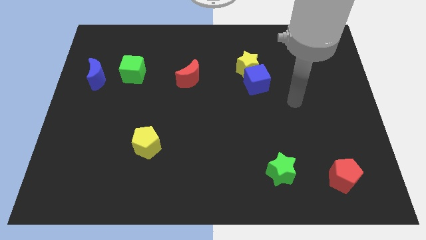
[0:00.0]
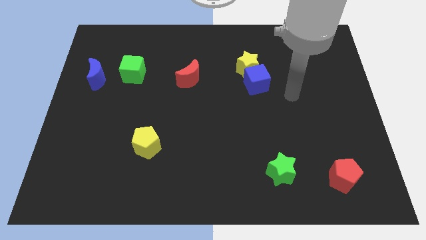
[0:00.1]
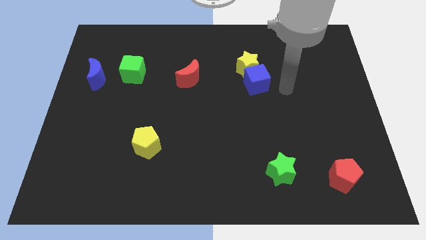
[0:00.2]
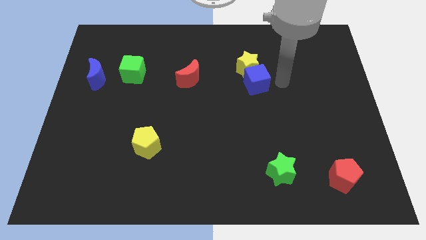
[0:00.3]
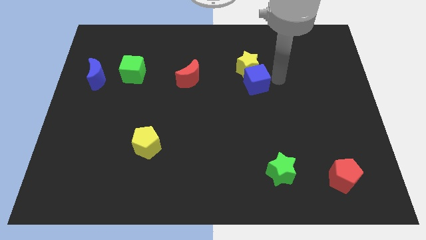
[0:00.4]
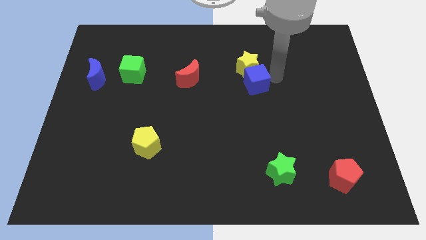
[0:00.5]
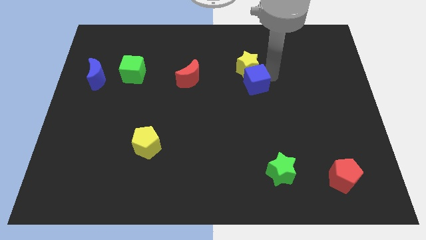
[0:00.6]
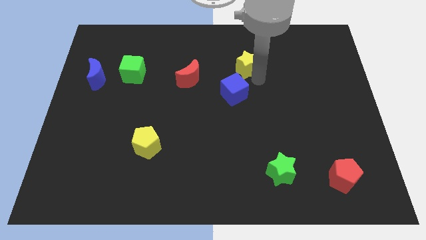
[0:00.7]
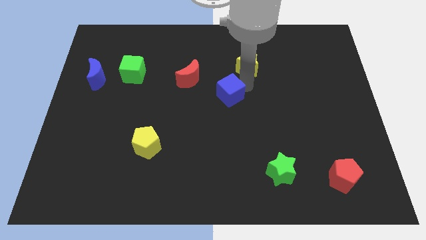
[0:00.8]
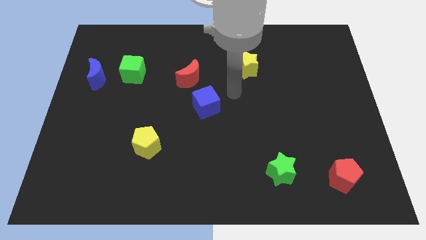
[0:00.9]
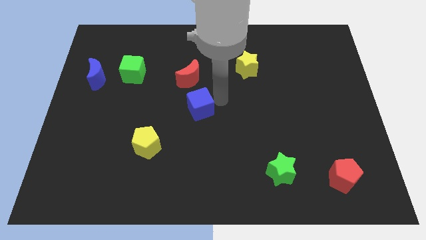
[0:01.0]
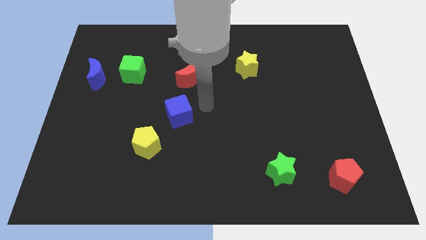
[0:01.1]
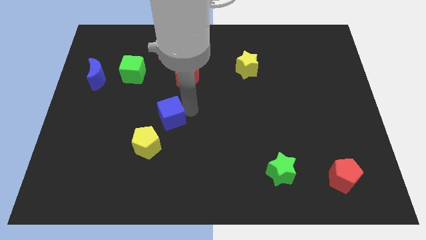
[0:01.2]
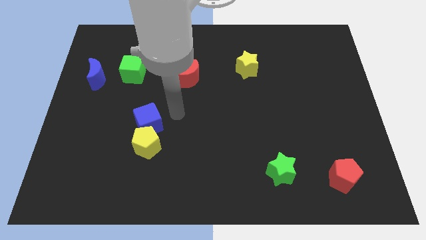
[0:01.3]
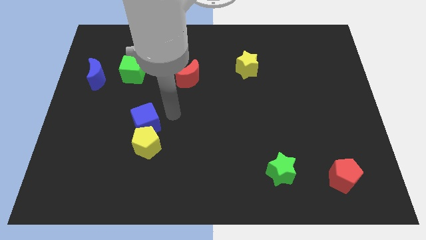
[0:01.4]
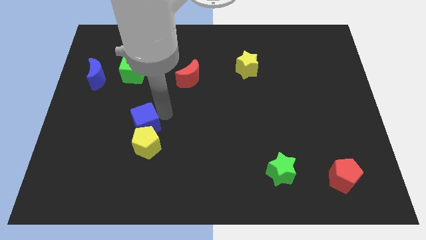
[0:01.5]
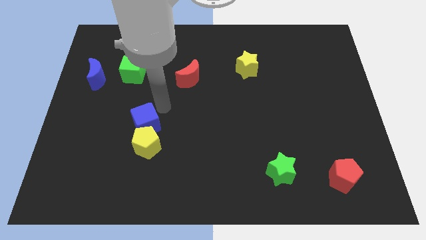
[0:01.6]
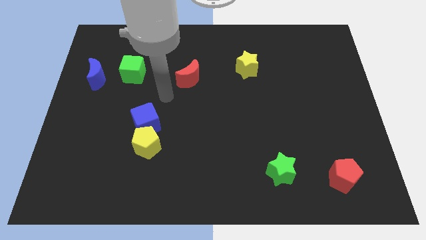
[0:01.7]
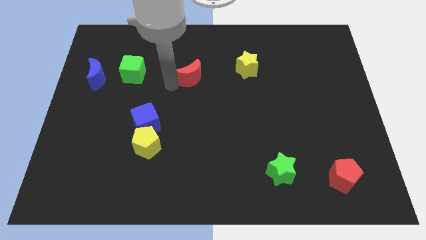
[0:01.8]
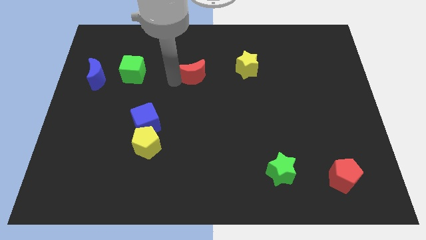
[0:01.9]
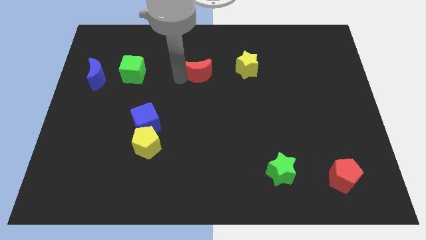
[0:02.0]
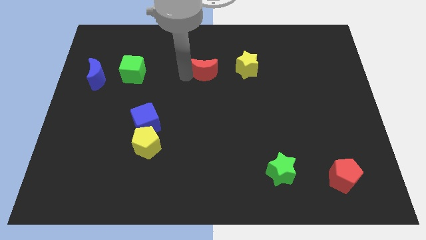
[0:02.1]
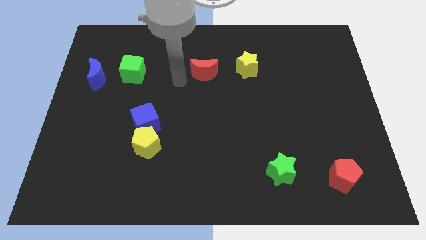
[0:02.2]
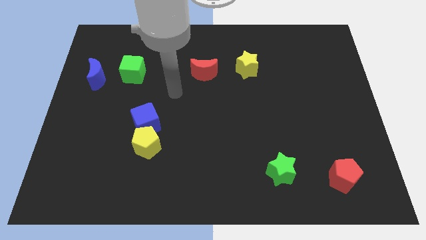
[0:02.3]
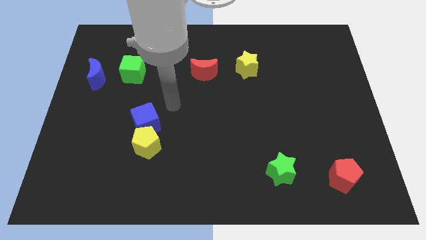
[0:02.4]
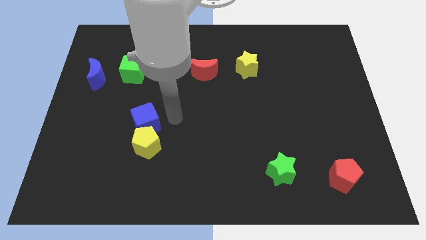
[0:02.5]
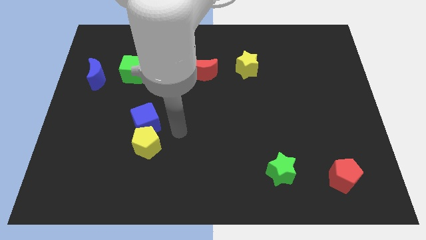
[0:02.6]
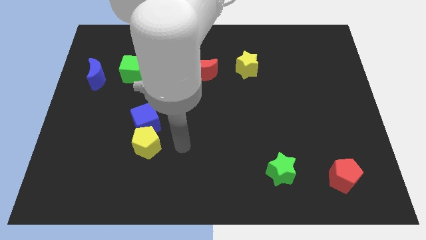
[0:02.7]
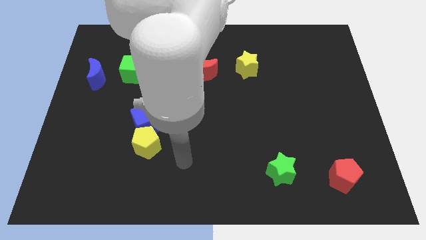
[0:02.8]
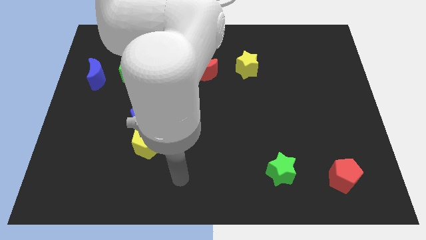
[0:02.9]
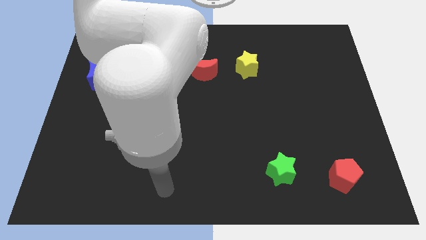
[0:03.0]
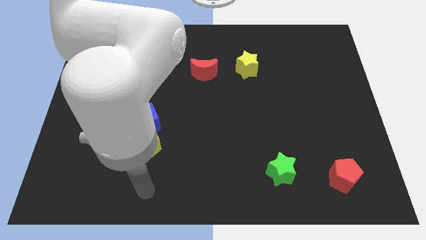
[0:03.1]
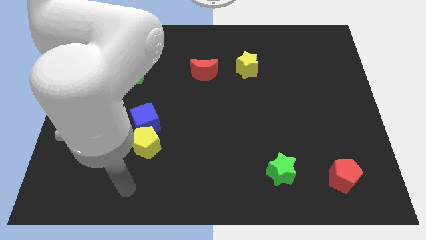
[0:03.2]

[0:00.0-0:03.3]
move the blue cube to the top side of the yellow pentagon

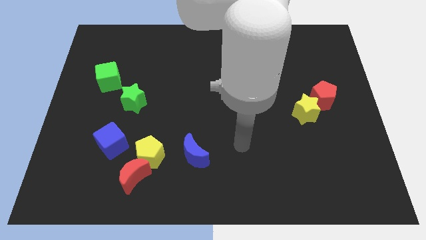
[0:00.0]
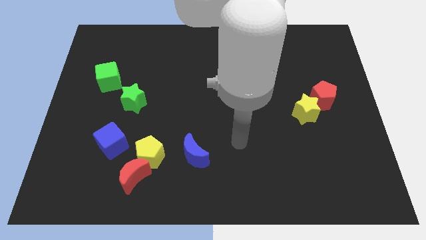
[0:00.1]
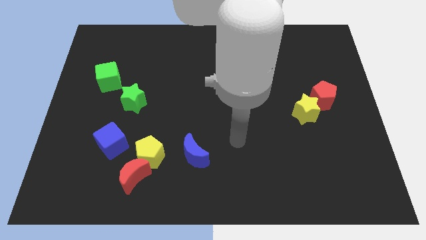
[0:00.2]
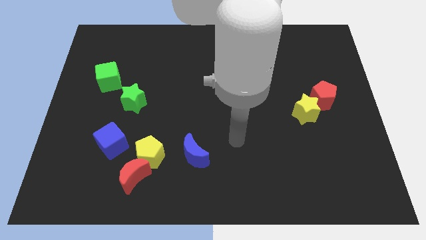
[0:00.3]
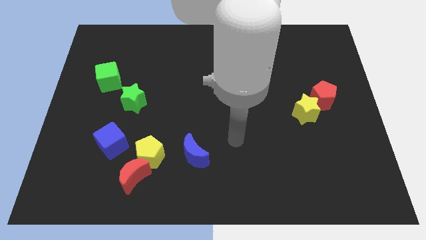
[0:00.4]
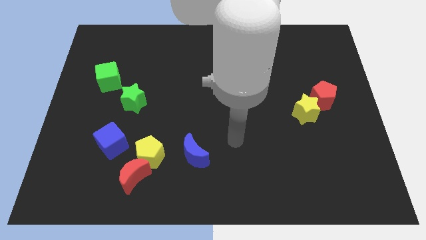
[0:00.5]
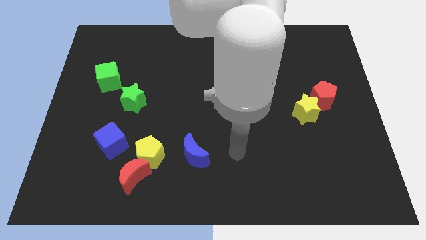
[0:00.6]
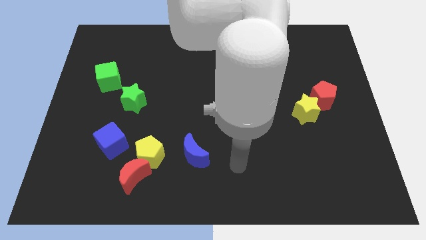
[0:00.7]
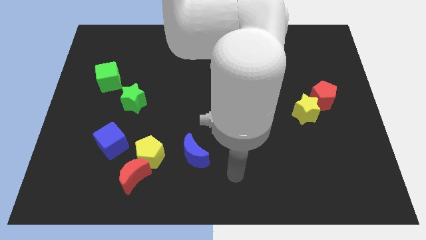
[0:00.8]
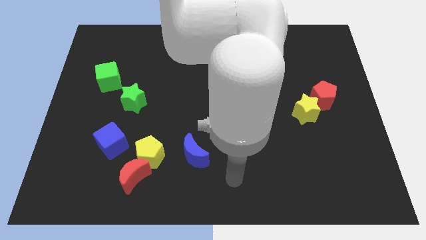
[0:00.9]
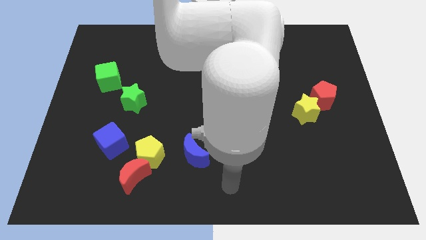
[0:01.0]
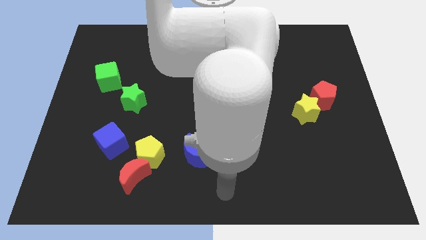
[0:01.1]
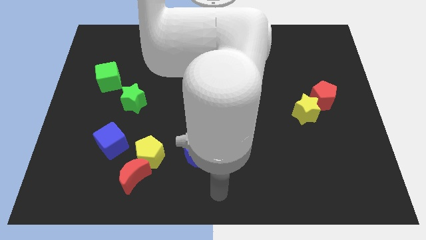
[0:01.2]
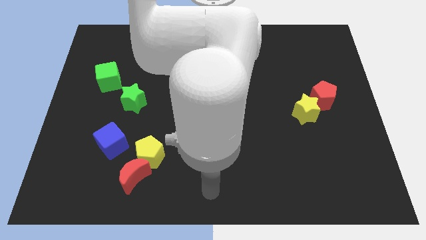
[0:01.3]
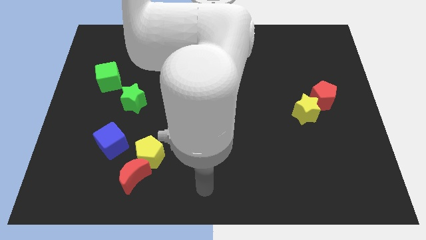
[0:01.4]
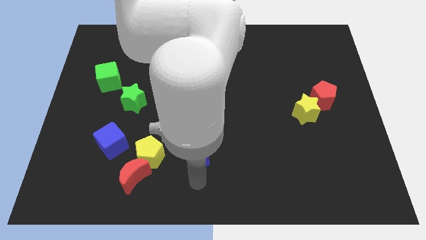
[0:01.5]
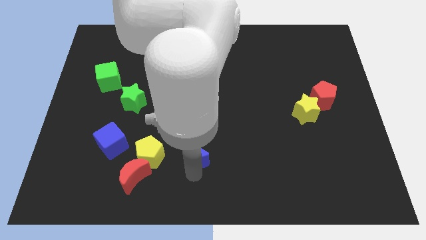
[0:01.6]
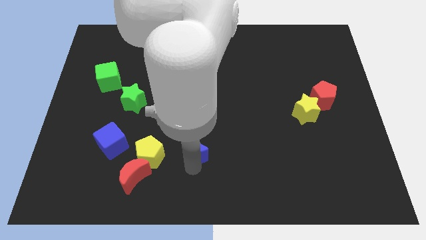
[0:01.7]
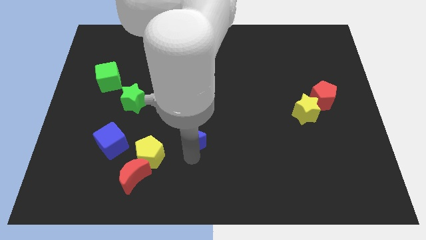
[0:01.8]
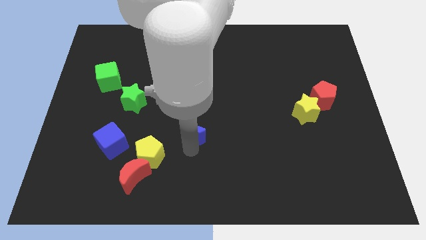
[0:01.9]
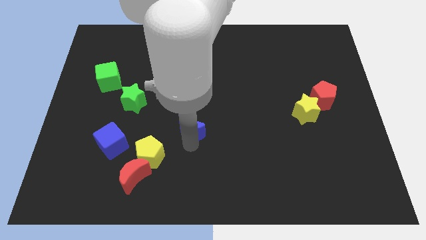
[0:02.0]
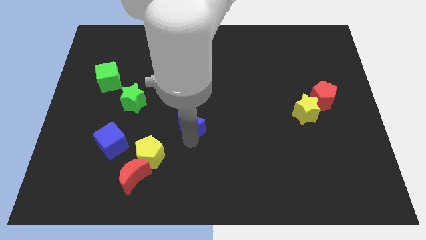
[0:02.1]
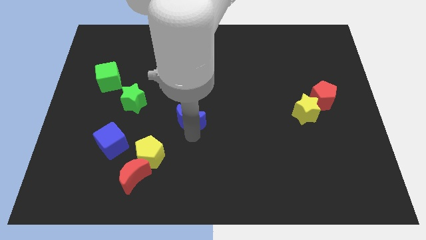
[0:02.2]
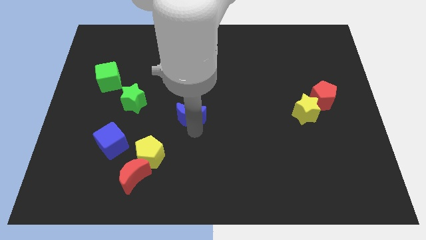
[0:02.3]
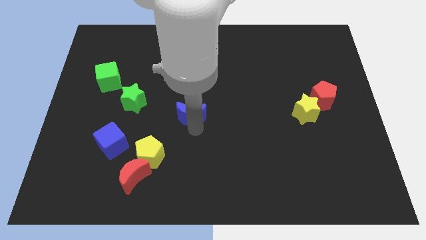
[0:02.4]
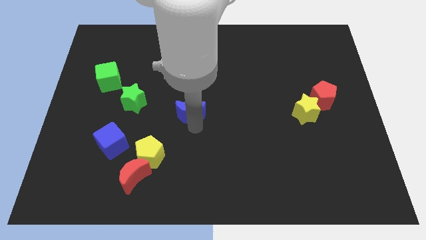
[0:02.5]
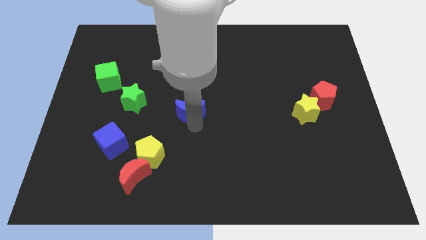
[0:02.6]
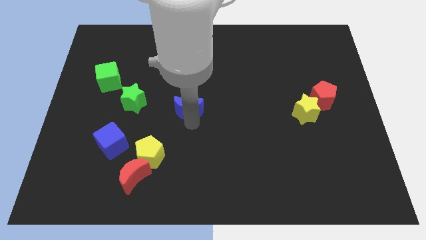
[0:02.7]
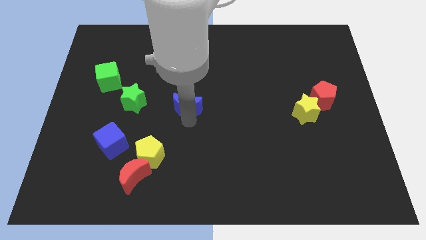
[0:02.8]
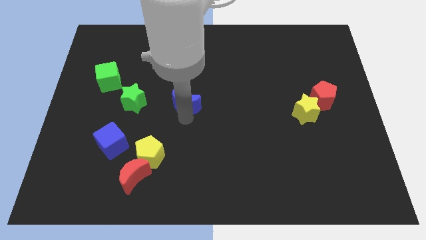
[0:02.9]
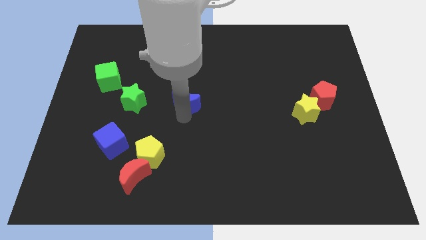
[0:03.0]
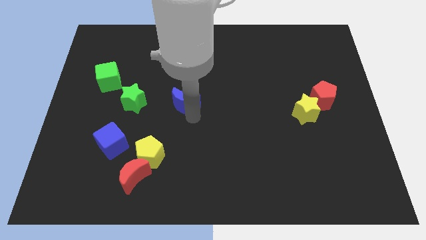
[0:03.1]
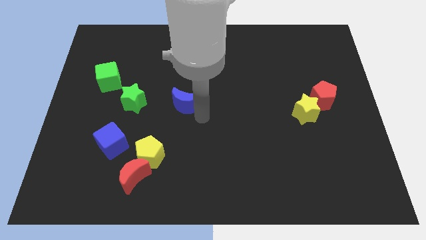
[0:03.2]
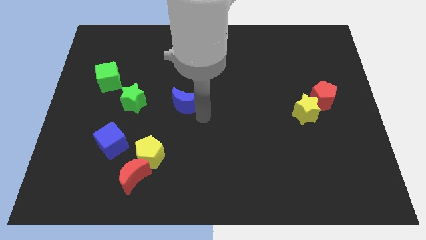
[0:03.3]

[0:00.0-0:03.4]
push the blue moon towards the center of the board

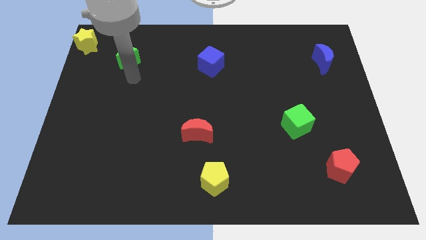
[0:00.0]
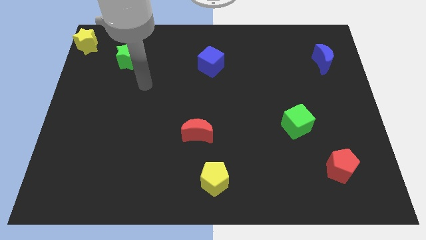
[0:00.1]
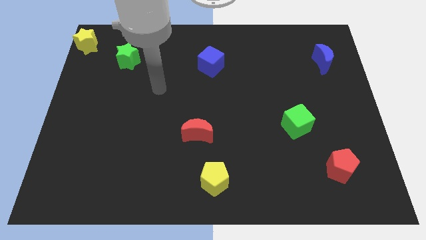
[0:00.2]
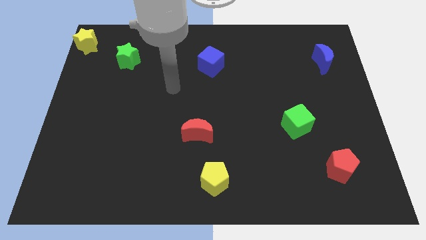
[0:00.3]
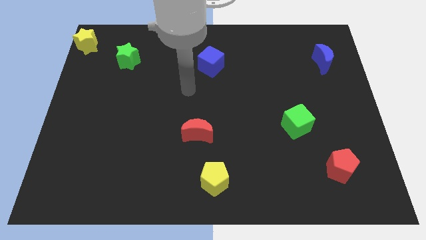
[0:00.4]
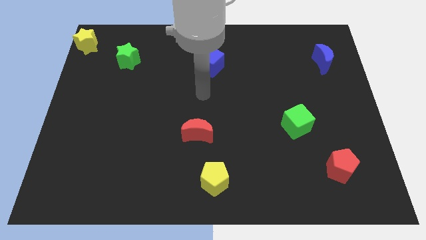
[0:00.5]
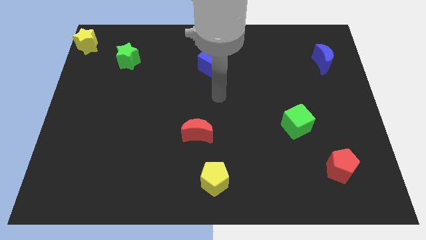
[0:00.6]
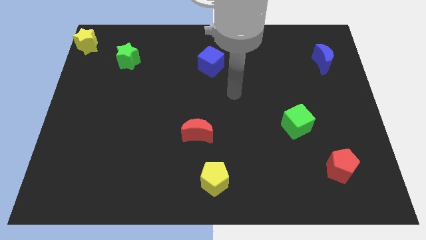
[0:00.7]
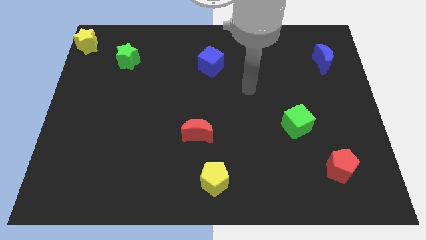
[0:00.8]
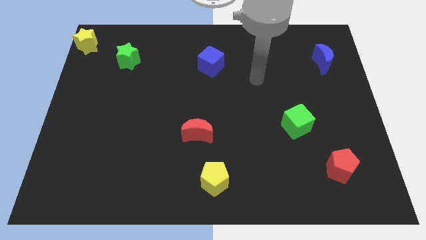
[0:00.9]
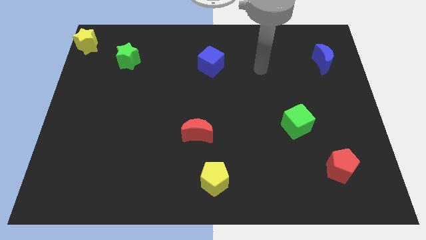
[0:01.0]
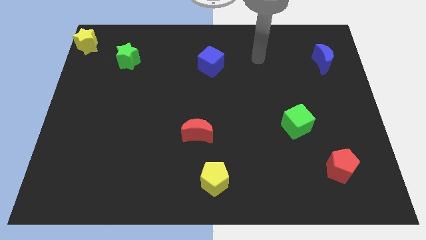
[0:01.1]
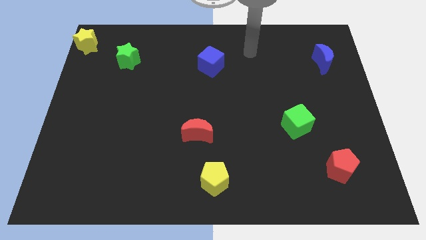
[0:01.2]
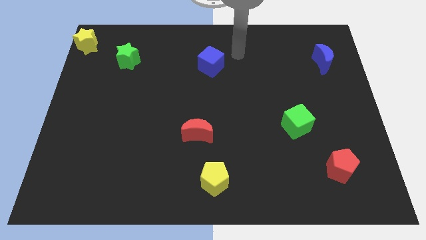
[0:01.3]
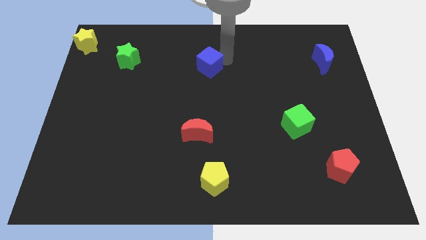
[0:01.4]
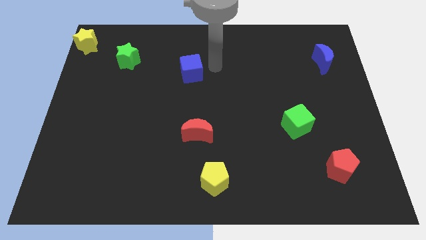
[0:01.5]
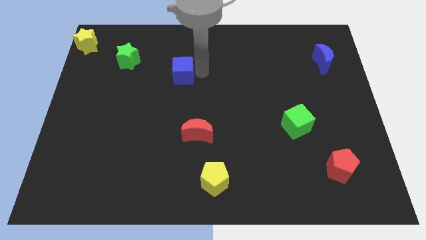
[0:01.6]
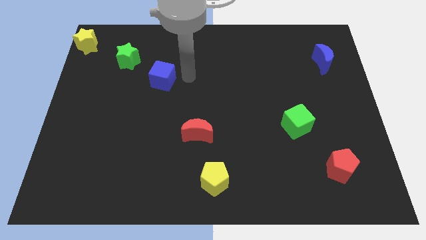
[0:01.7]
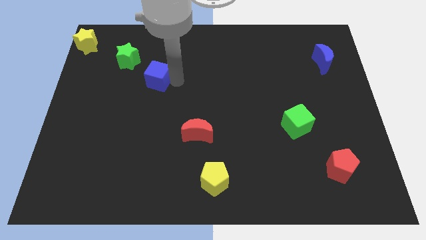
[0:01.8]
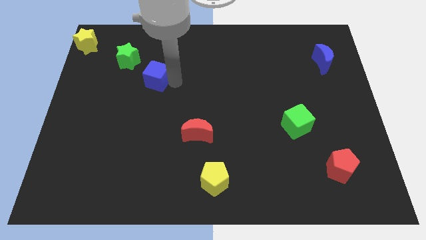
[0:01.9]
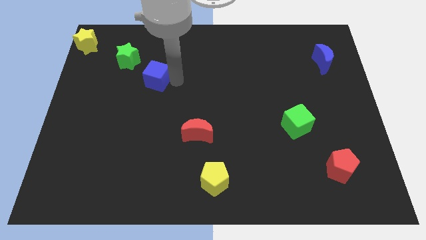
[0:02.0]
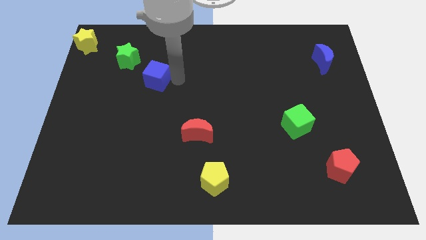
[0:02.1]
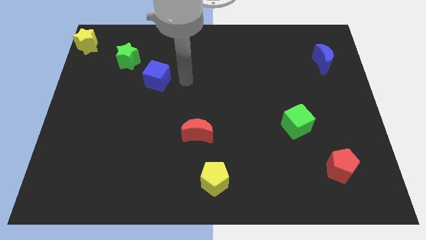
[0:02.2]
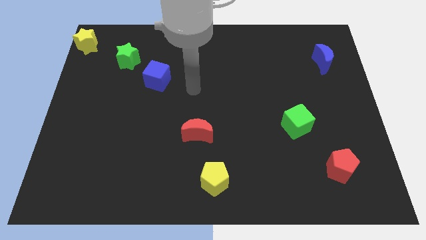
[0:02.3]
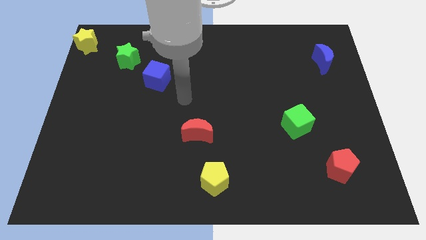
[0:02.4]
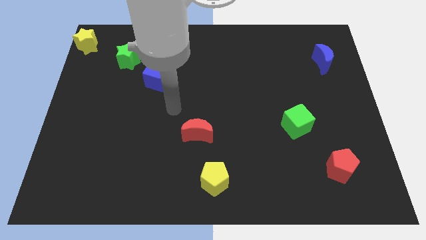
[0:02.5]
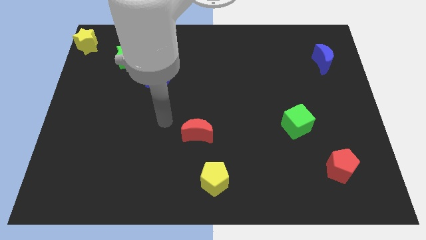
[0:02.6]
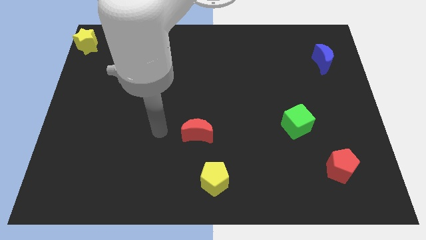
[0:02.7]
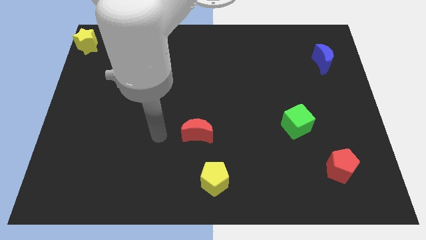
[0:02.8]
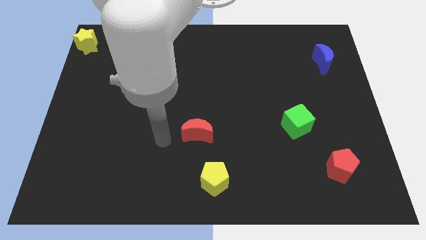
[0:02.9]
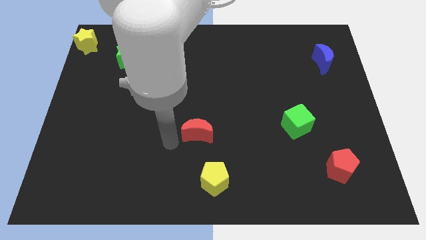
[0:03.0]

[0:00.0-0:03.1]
push the blue cube slightly to the left
